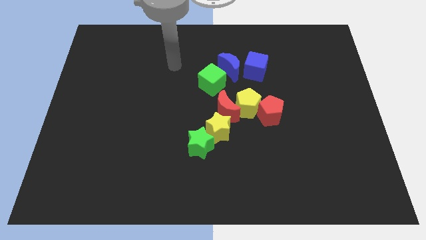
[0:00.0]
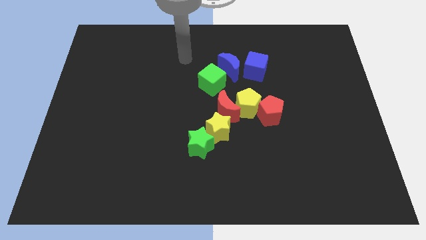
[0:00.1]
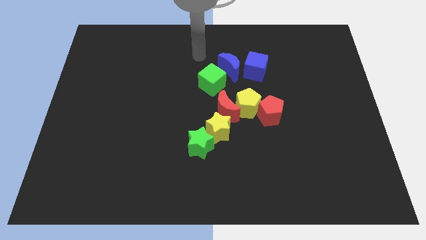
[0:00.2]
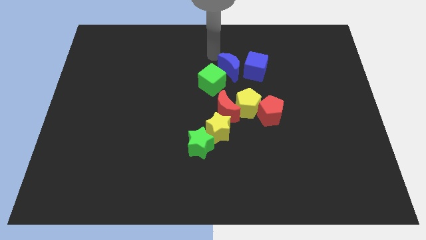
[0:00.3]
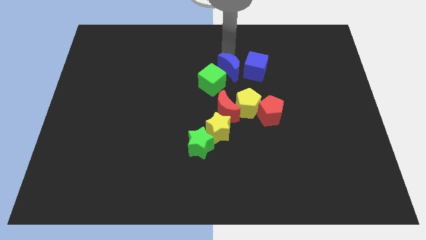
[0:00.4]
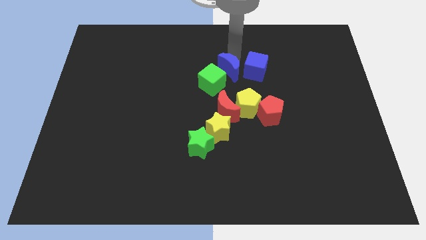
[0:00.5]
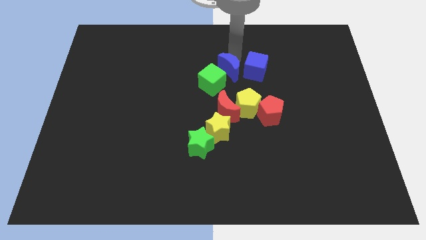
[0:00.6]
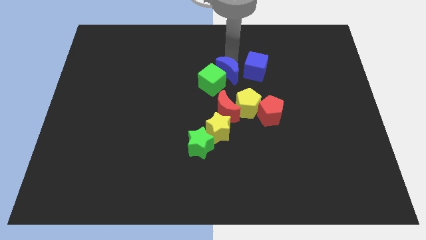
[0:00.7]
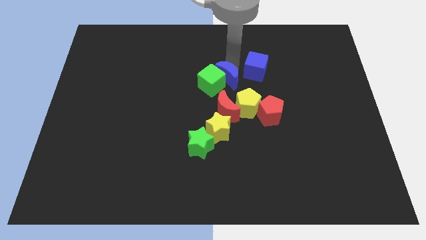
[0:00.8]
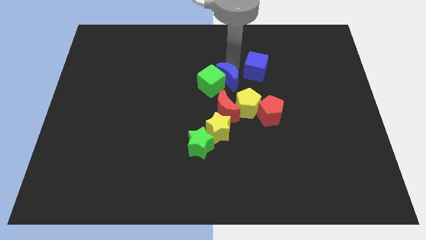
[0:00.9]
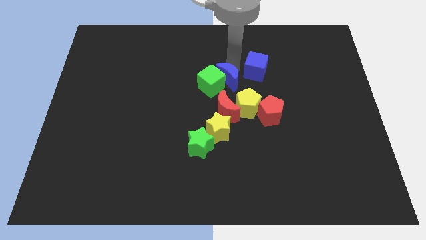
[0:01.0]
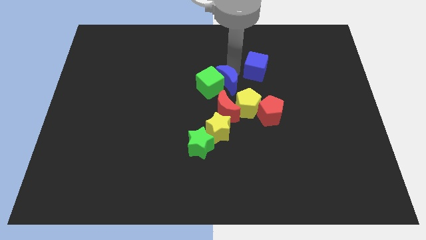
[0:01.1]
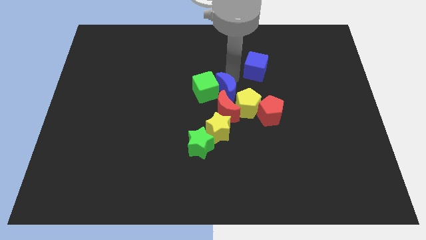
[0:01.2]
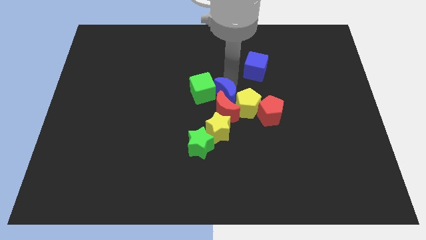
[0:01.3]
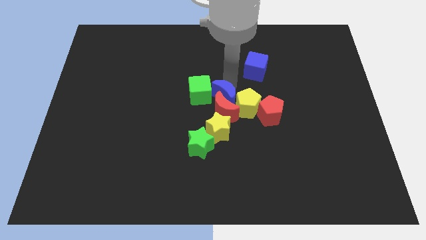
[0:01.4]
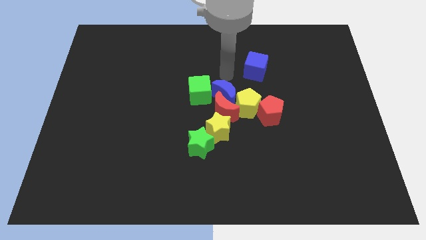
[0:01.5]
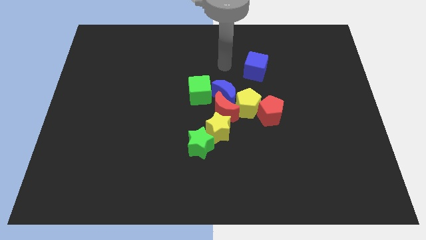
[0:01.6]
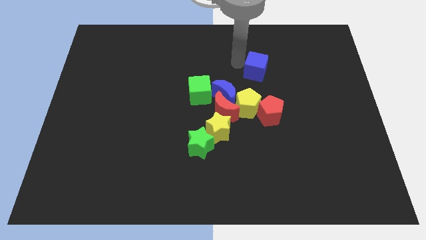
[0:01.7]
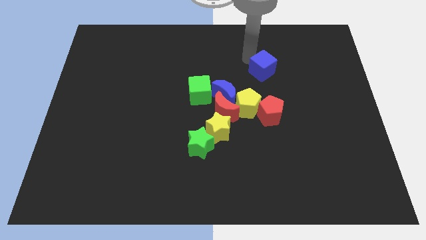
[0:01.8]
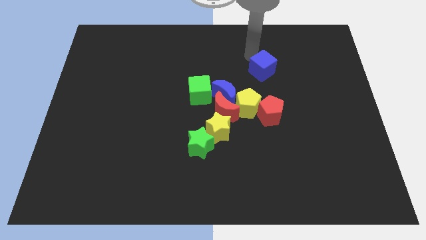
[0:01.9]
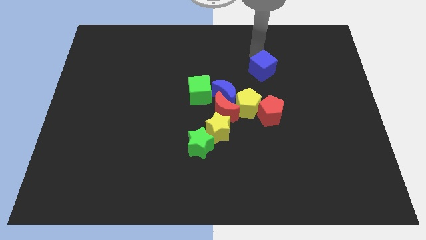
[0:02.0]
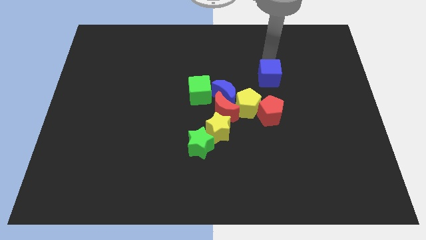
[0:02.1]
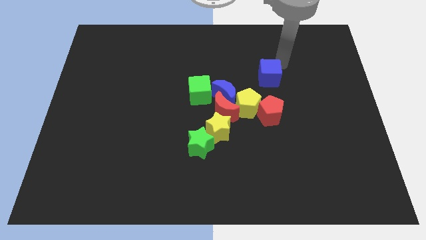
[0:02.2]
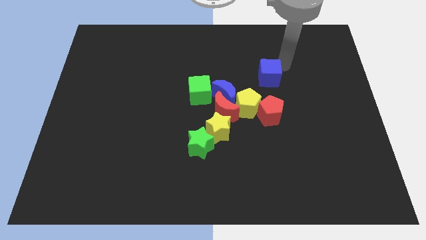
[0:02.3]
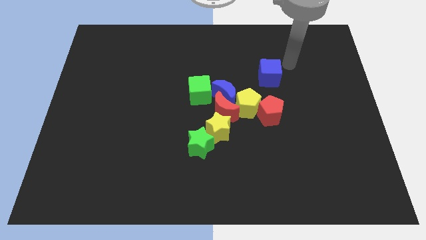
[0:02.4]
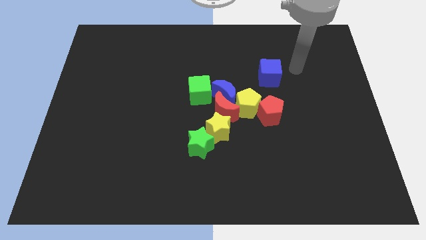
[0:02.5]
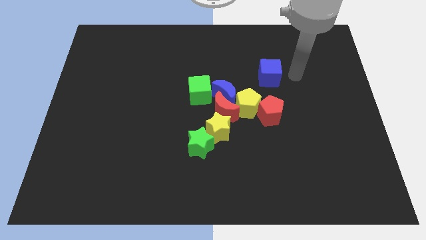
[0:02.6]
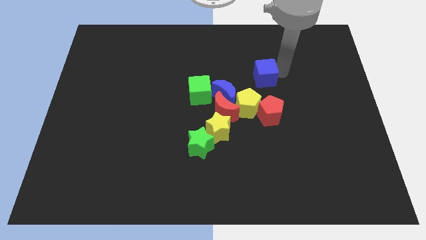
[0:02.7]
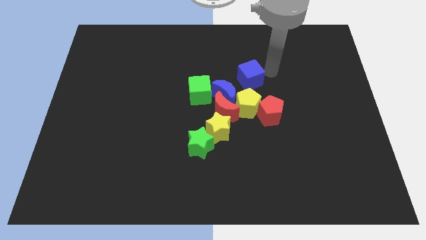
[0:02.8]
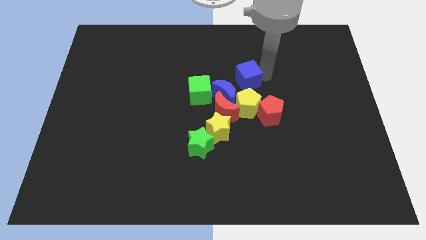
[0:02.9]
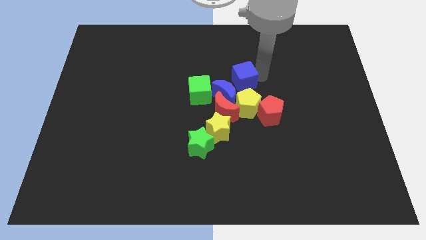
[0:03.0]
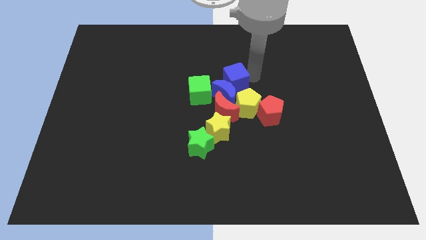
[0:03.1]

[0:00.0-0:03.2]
drag blue blocks into group of blocks

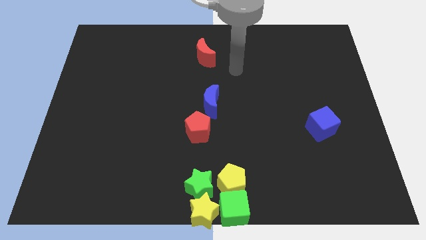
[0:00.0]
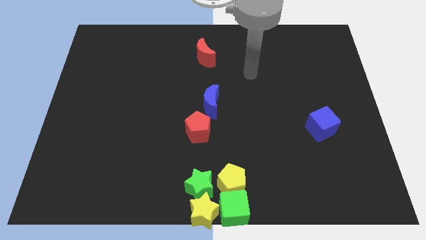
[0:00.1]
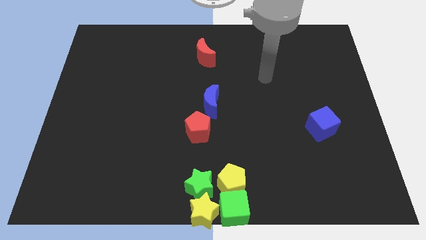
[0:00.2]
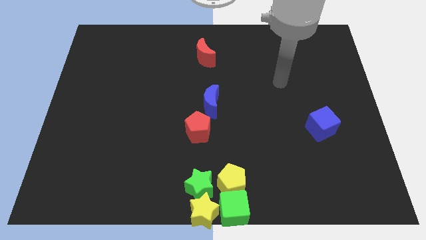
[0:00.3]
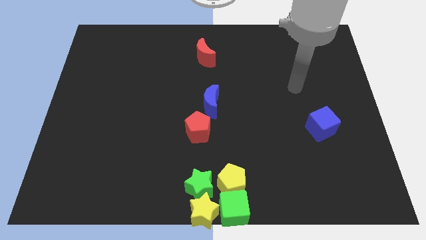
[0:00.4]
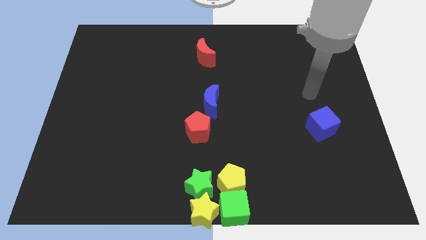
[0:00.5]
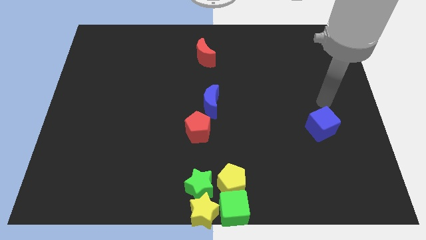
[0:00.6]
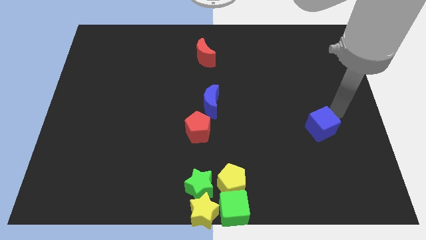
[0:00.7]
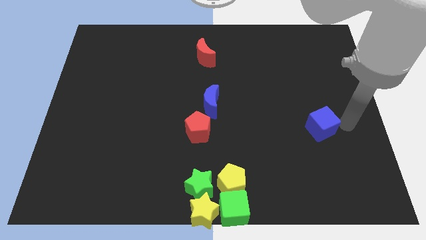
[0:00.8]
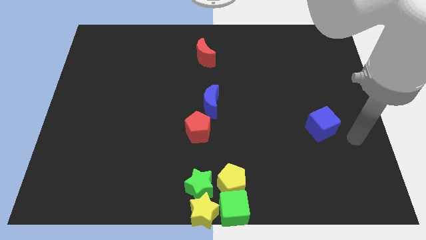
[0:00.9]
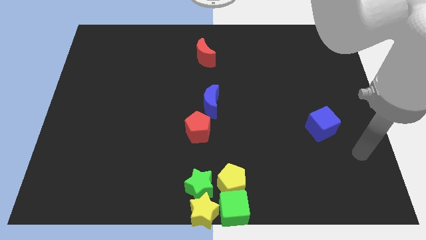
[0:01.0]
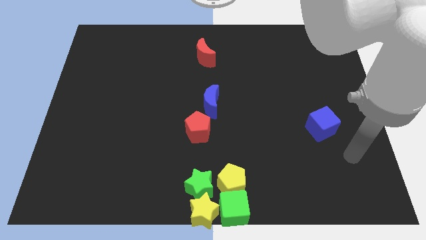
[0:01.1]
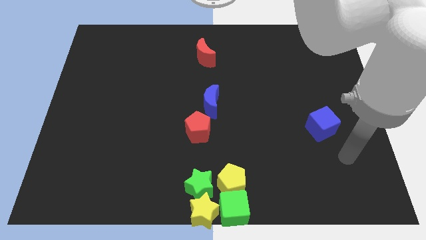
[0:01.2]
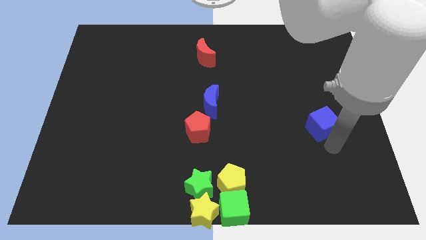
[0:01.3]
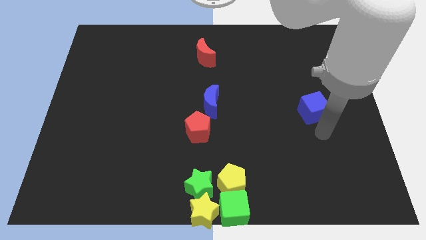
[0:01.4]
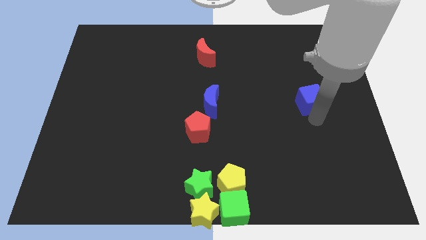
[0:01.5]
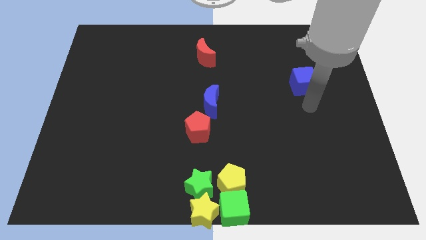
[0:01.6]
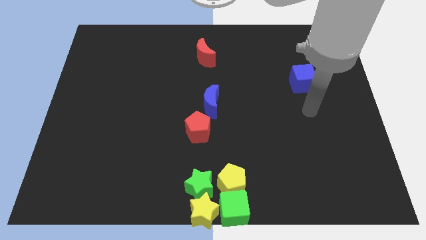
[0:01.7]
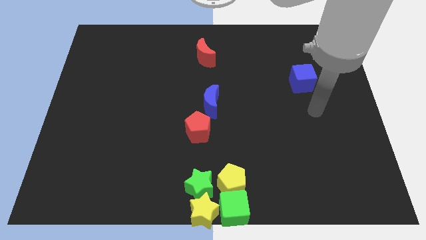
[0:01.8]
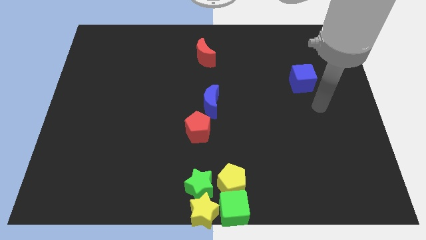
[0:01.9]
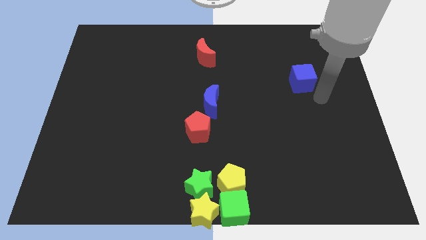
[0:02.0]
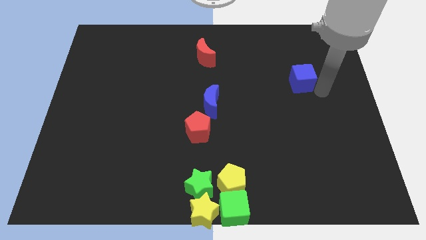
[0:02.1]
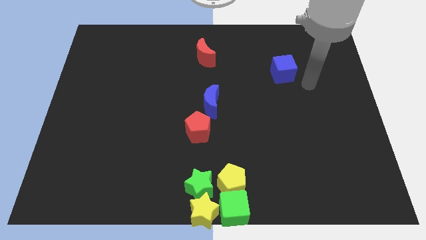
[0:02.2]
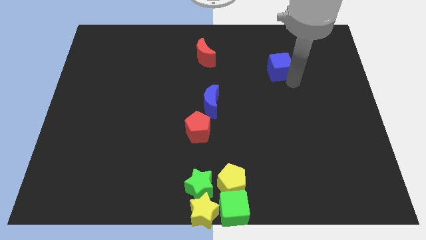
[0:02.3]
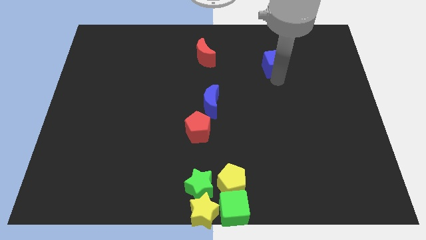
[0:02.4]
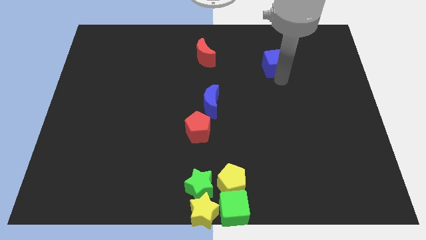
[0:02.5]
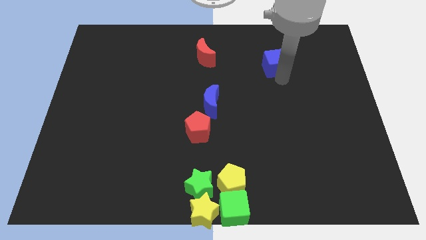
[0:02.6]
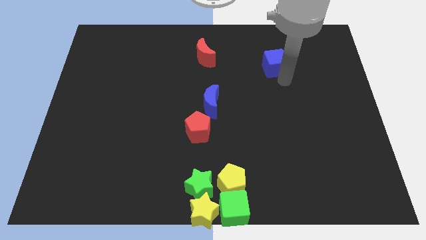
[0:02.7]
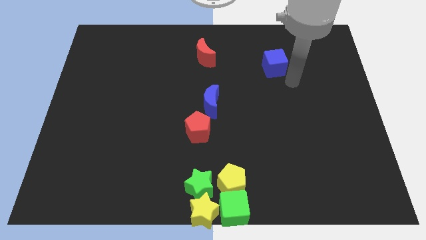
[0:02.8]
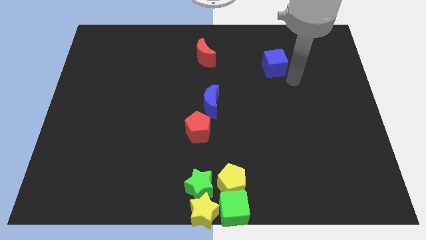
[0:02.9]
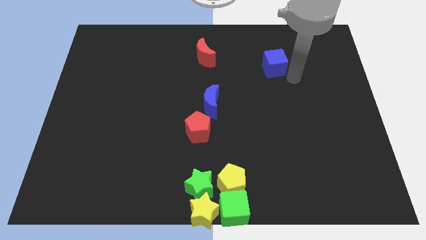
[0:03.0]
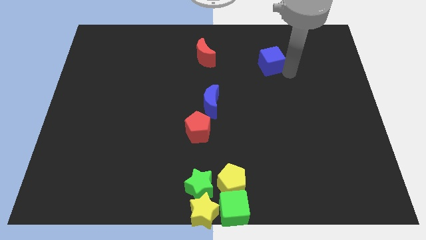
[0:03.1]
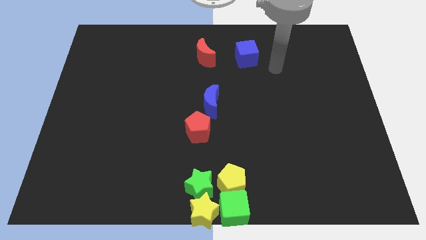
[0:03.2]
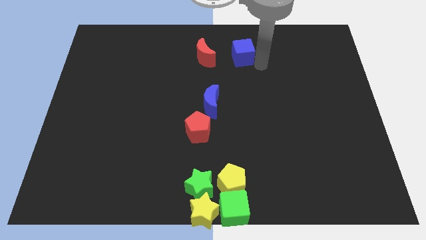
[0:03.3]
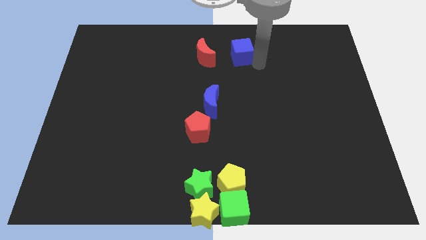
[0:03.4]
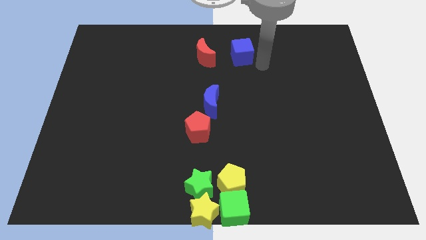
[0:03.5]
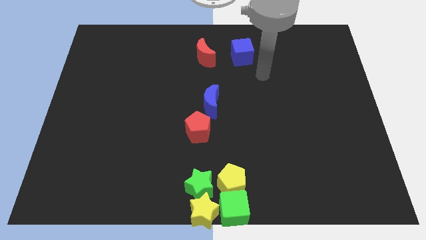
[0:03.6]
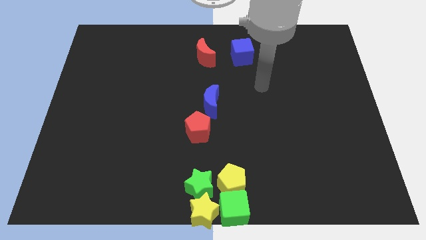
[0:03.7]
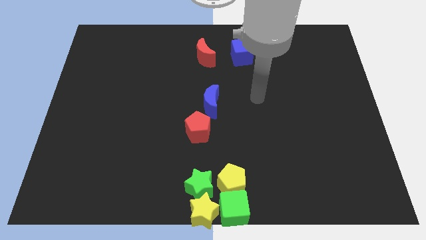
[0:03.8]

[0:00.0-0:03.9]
move the blue cube to the right of the red moon

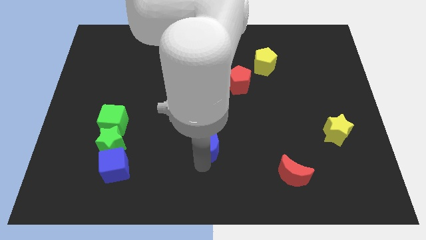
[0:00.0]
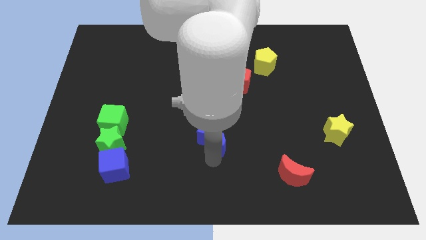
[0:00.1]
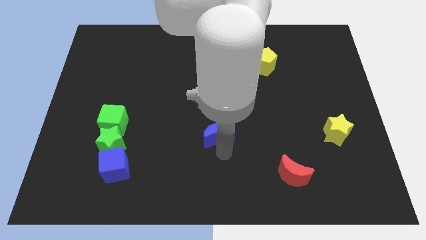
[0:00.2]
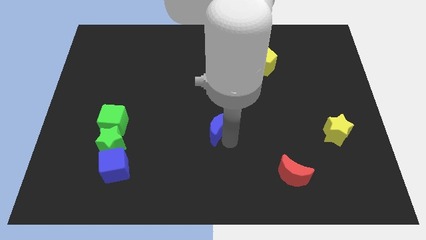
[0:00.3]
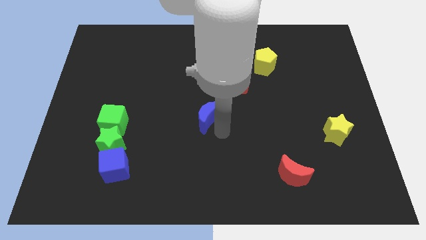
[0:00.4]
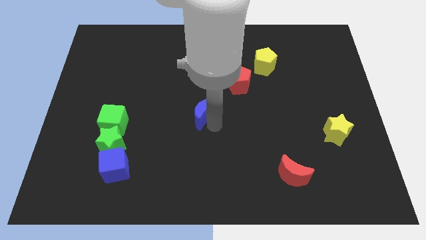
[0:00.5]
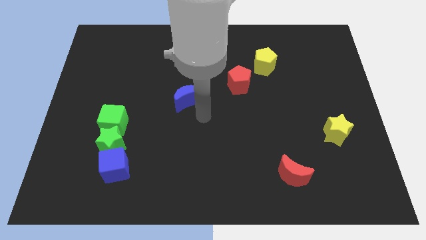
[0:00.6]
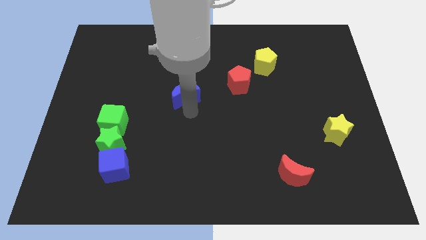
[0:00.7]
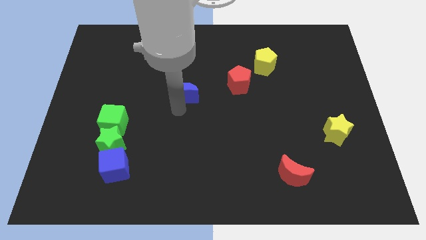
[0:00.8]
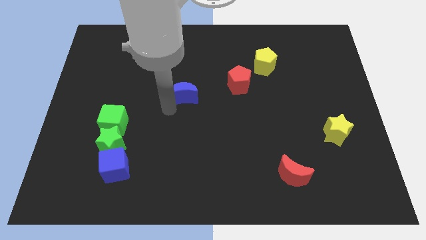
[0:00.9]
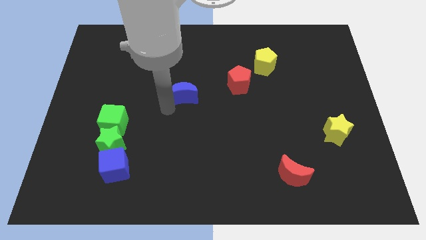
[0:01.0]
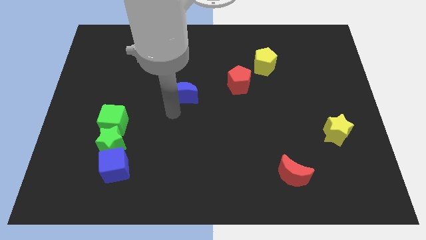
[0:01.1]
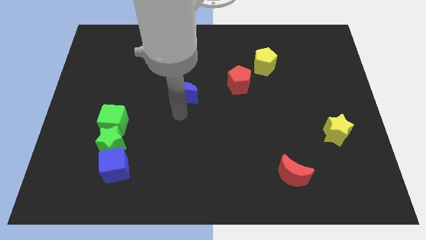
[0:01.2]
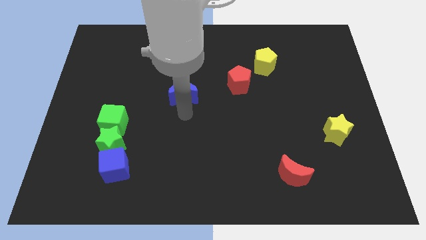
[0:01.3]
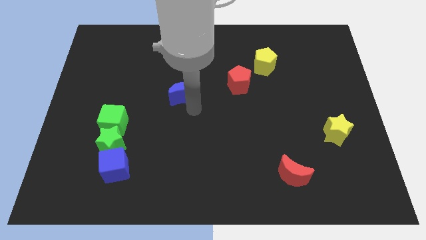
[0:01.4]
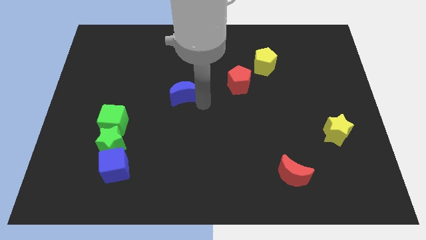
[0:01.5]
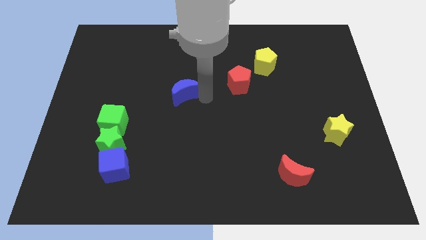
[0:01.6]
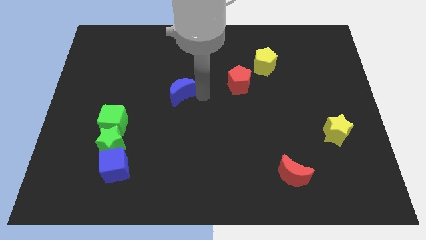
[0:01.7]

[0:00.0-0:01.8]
move the blue moon diagonally to the top right of the blue cube
